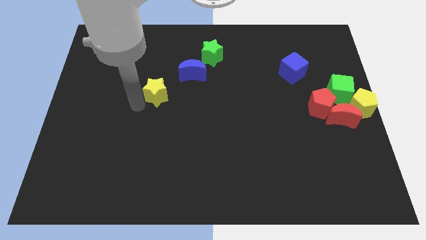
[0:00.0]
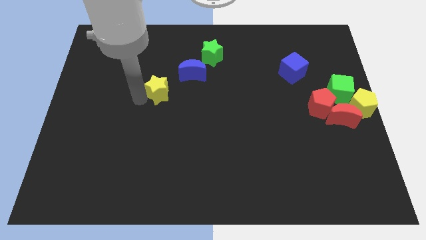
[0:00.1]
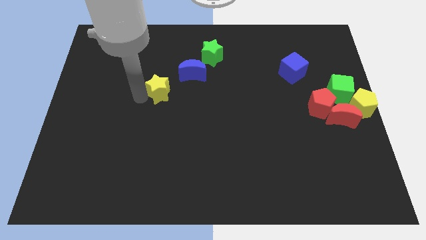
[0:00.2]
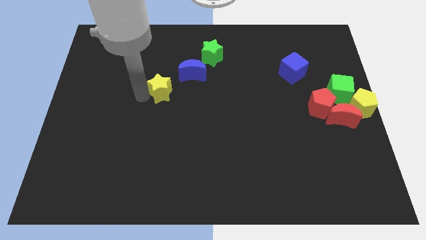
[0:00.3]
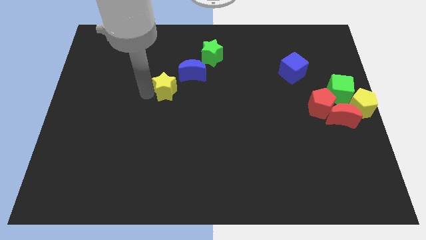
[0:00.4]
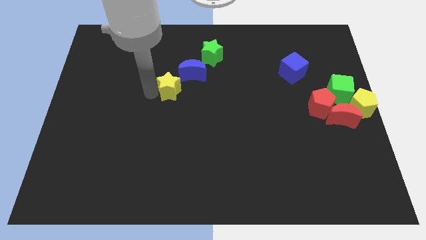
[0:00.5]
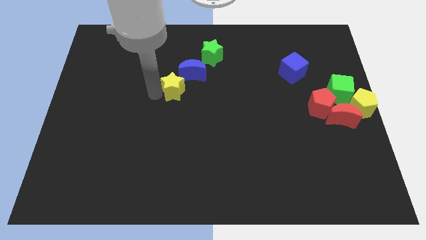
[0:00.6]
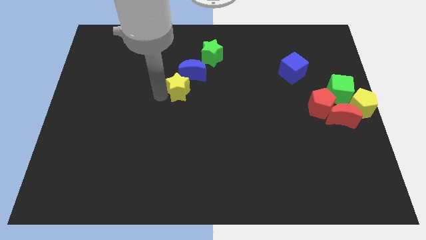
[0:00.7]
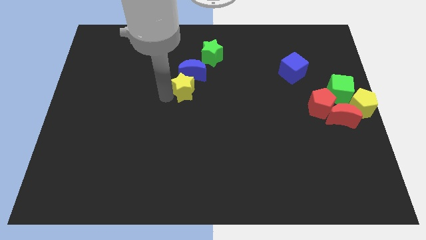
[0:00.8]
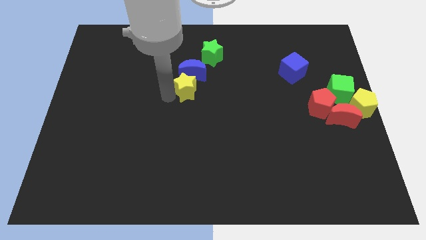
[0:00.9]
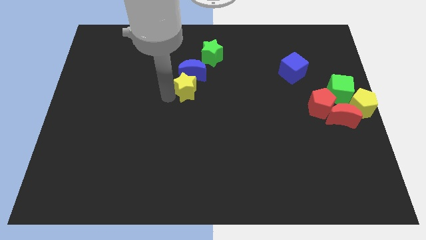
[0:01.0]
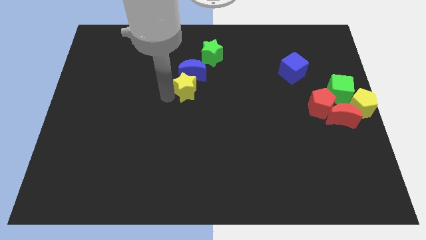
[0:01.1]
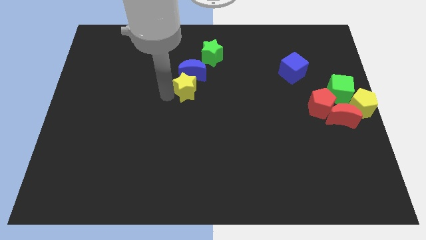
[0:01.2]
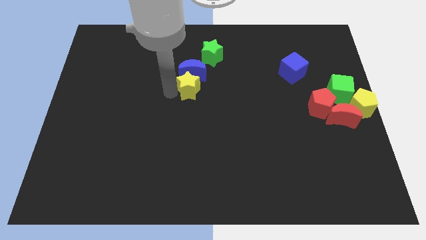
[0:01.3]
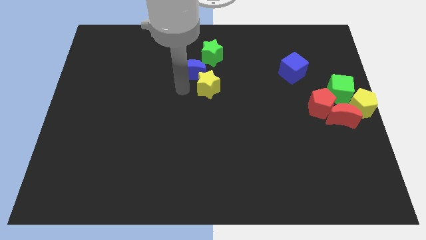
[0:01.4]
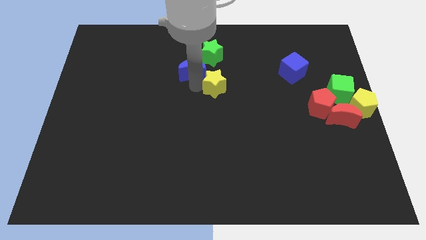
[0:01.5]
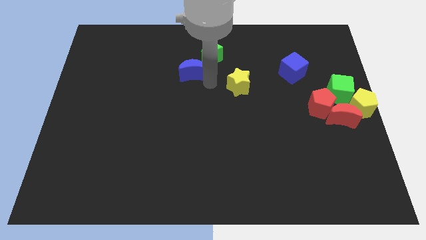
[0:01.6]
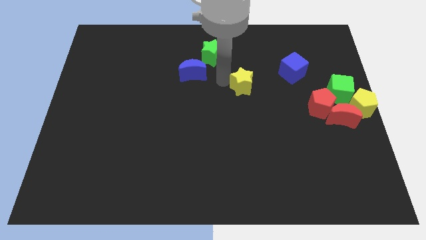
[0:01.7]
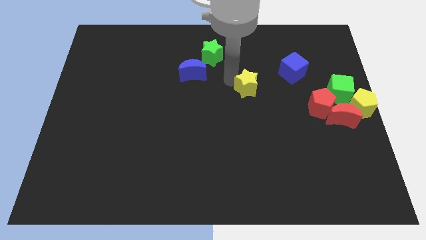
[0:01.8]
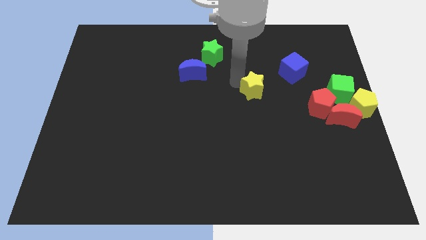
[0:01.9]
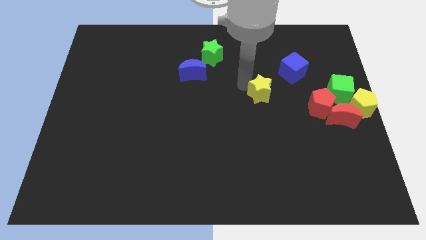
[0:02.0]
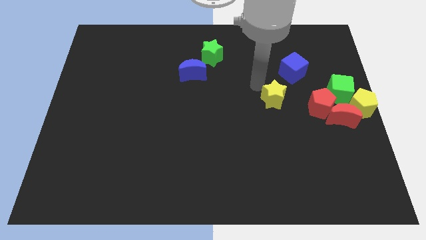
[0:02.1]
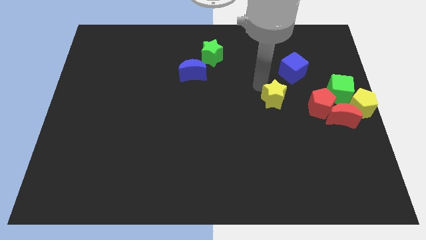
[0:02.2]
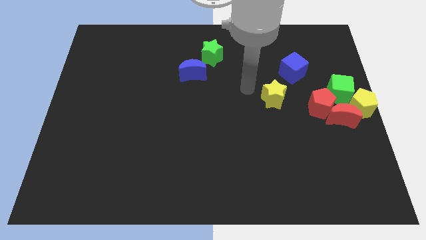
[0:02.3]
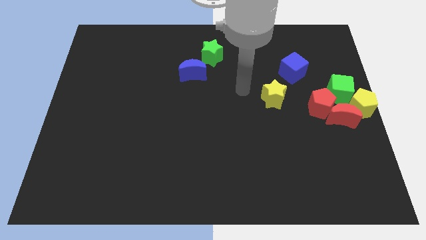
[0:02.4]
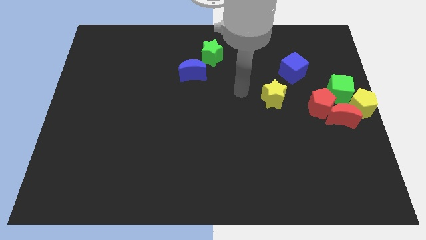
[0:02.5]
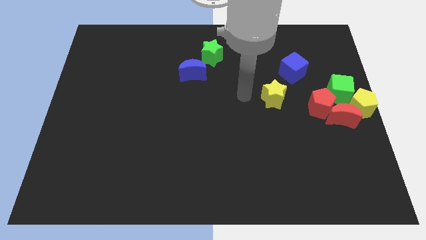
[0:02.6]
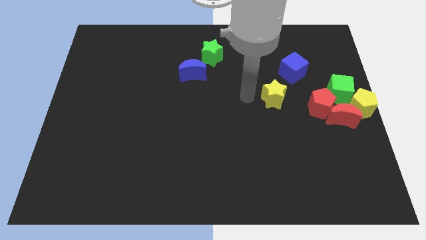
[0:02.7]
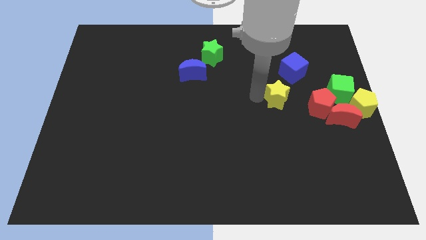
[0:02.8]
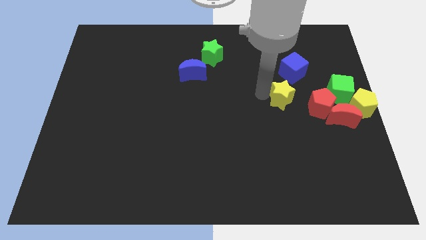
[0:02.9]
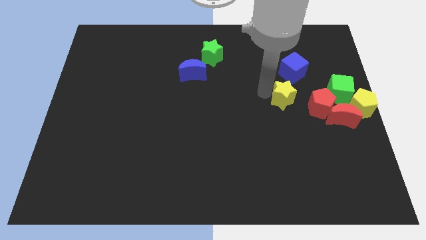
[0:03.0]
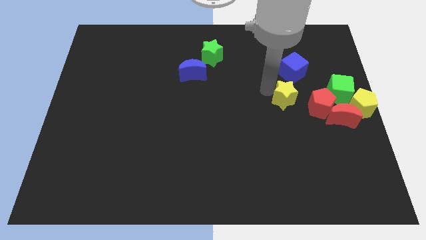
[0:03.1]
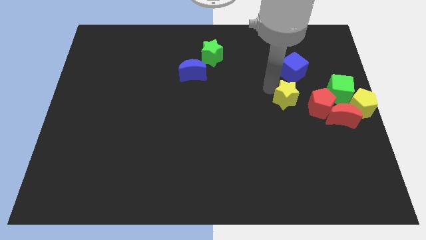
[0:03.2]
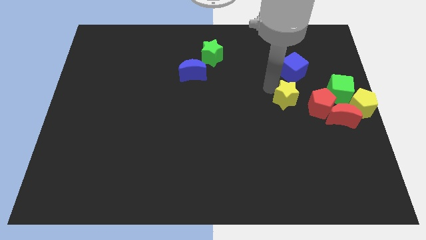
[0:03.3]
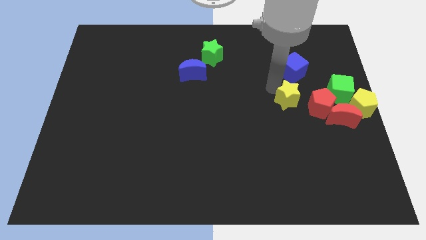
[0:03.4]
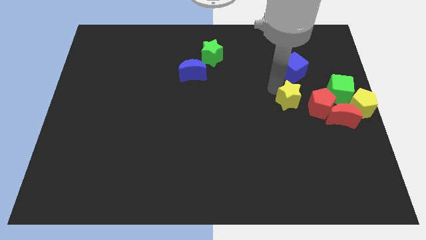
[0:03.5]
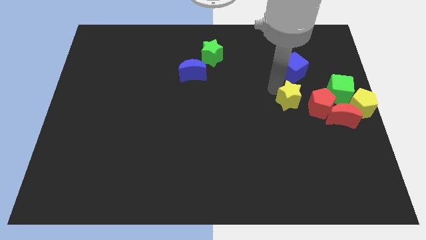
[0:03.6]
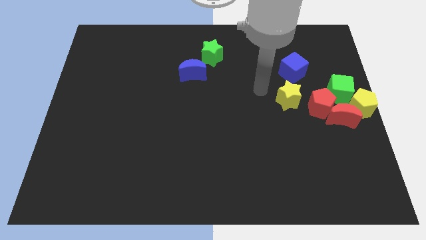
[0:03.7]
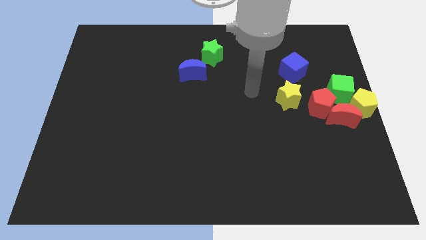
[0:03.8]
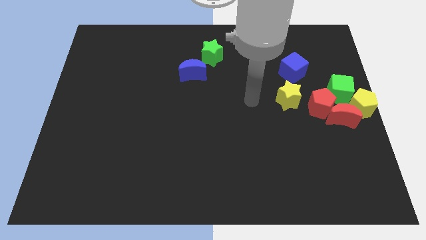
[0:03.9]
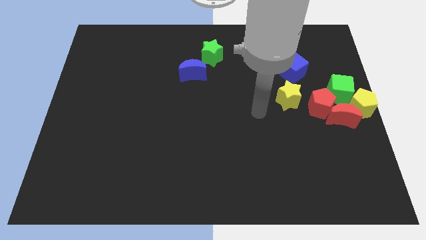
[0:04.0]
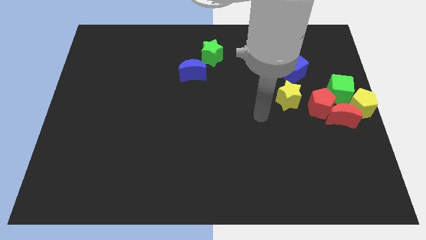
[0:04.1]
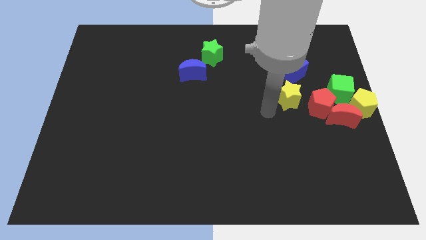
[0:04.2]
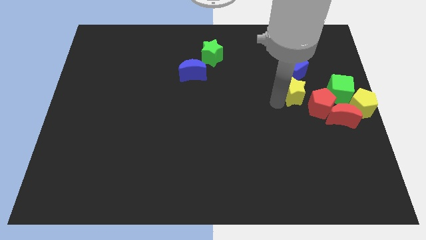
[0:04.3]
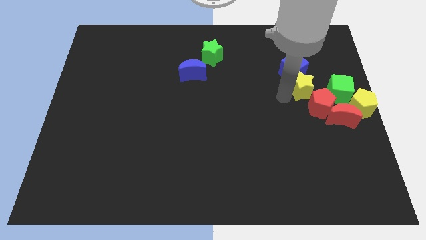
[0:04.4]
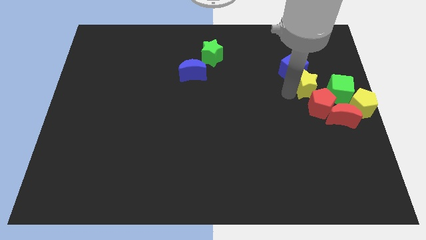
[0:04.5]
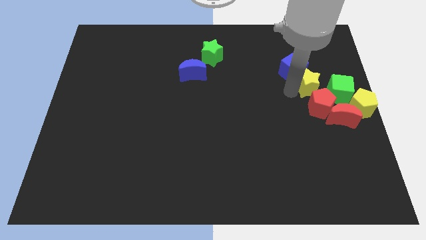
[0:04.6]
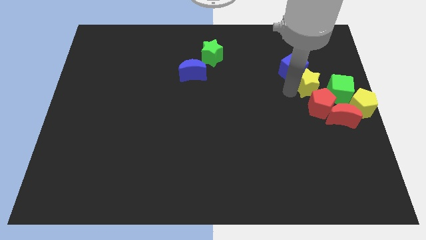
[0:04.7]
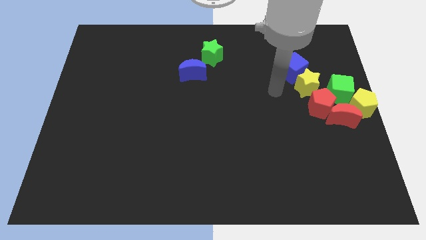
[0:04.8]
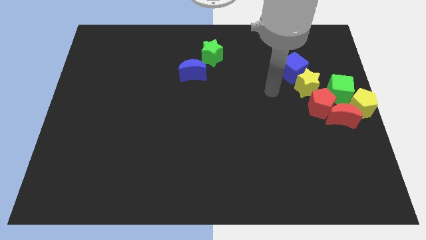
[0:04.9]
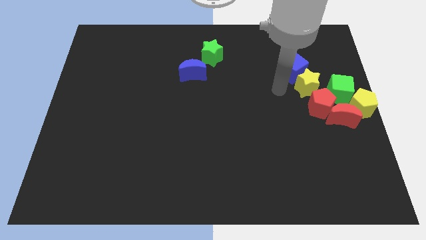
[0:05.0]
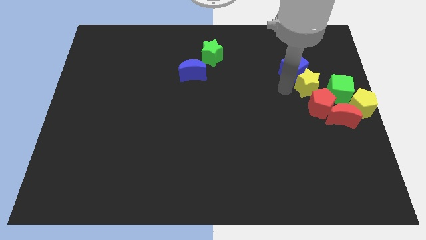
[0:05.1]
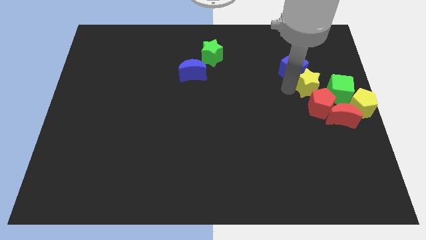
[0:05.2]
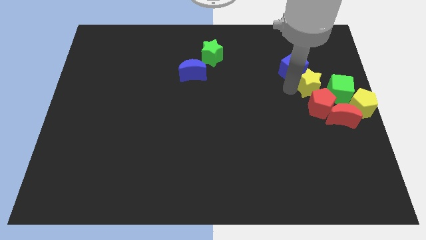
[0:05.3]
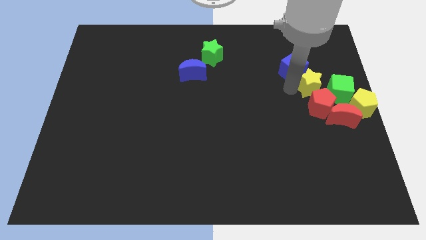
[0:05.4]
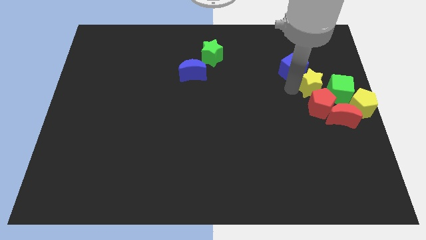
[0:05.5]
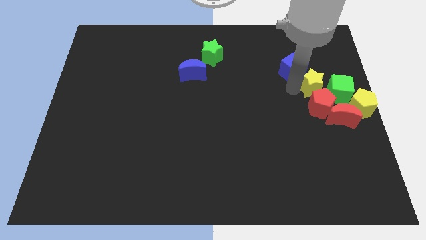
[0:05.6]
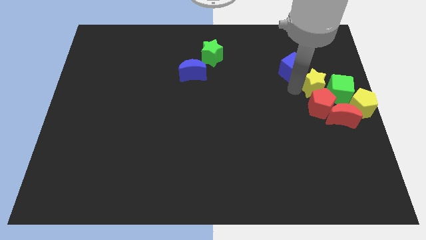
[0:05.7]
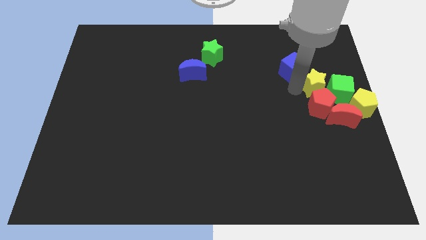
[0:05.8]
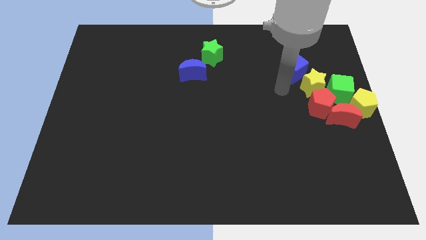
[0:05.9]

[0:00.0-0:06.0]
place the yellow star to the left of the green cube

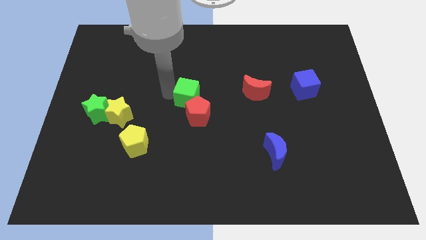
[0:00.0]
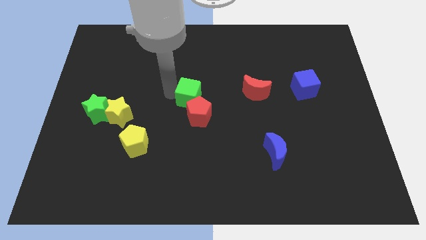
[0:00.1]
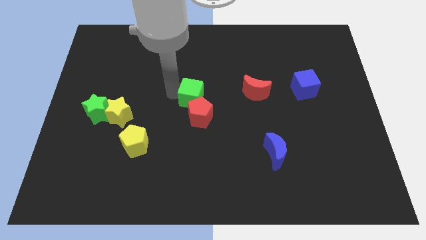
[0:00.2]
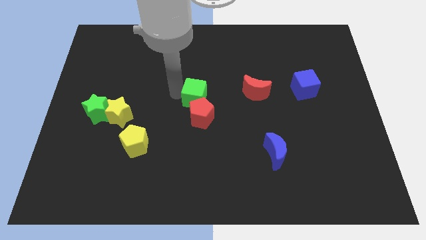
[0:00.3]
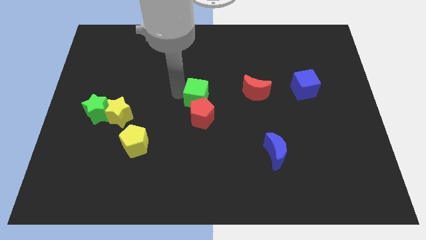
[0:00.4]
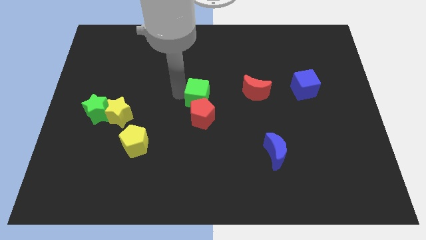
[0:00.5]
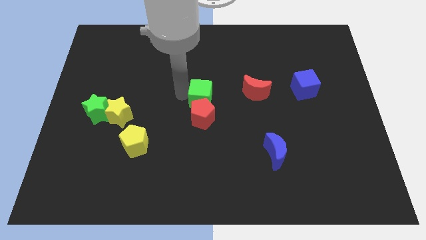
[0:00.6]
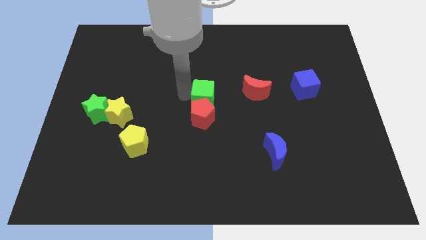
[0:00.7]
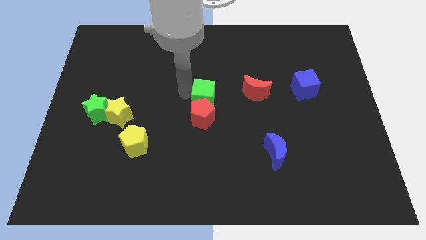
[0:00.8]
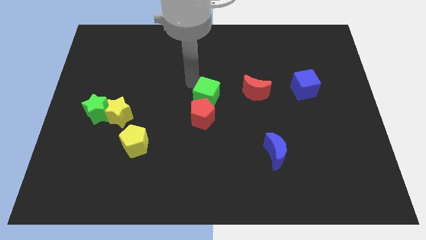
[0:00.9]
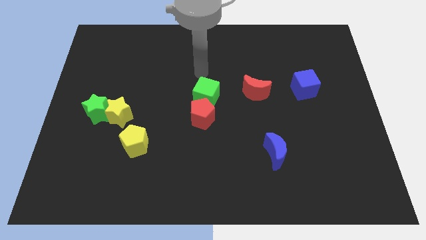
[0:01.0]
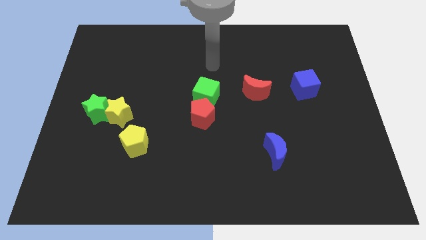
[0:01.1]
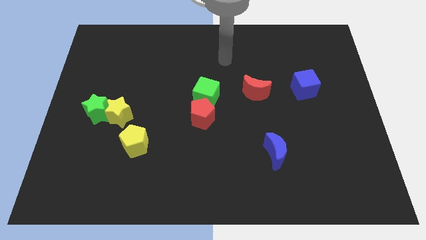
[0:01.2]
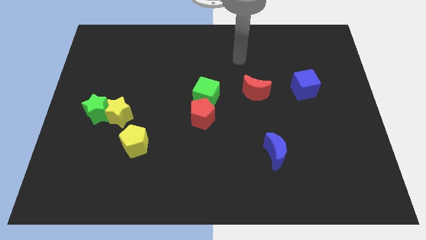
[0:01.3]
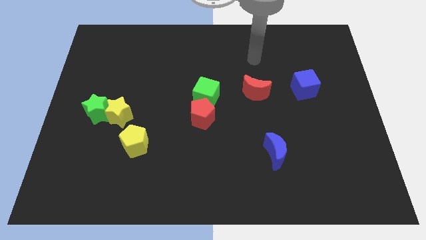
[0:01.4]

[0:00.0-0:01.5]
move the green cube to the top of the red pentagon

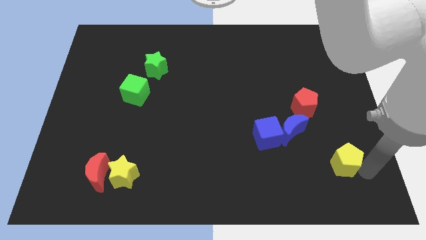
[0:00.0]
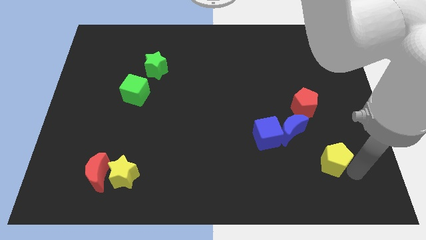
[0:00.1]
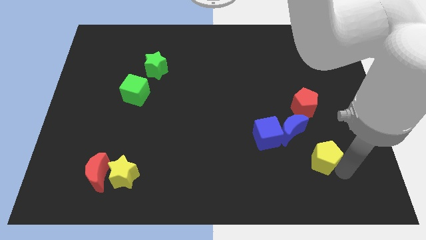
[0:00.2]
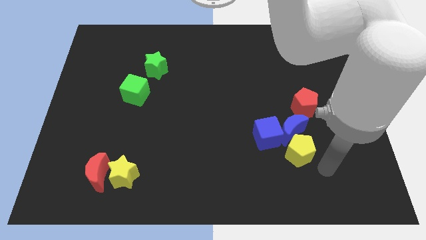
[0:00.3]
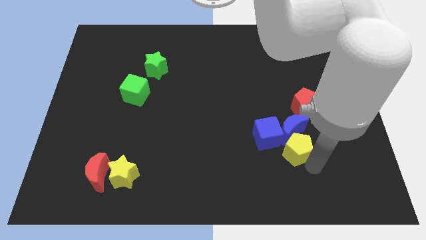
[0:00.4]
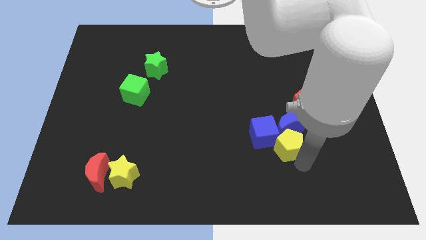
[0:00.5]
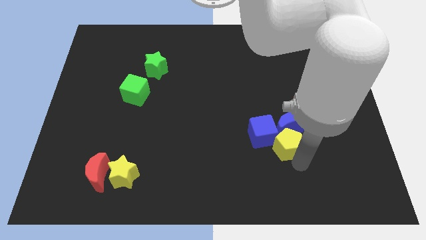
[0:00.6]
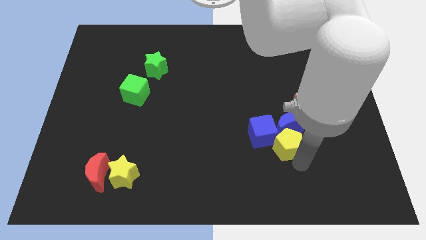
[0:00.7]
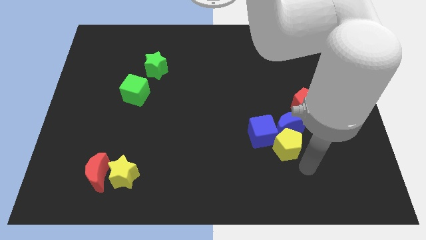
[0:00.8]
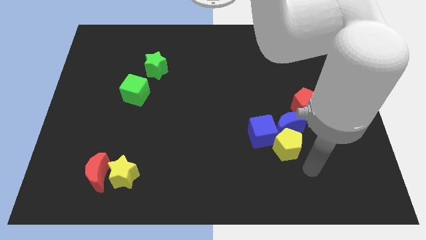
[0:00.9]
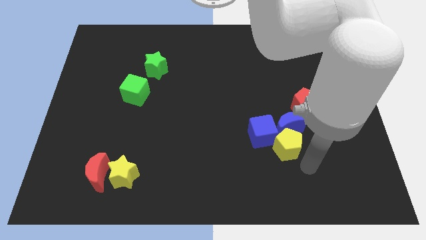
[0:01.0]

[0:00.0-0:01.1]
push the yellow pentagon into the blue crescent and blue cube

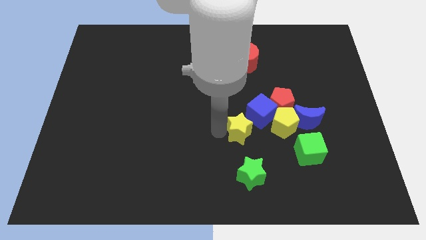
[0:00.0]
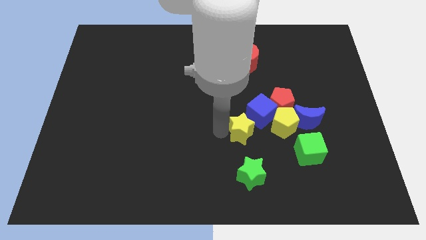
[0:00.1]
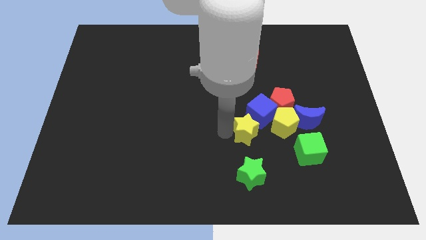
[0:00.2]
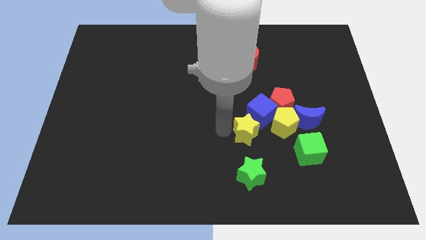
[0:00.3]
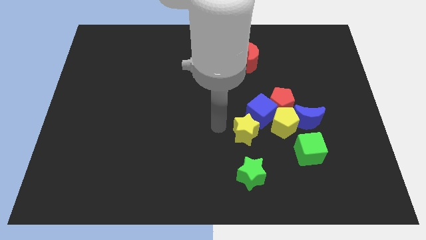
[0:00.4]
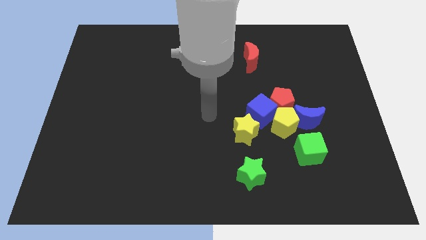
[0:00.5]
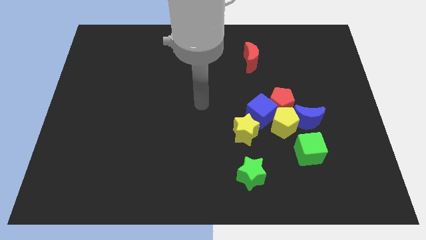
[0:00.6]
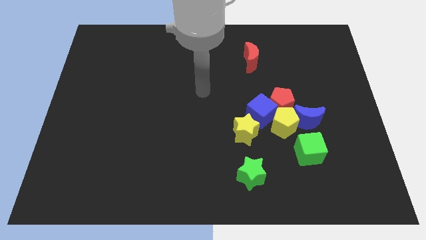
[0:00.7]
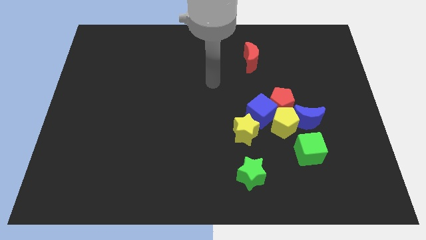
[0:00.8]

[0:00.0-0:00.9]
place the yellow star vertically to the green star
